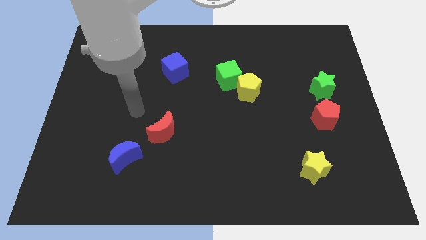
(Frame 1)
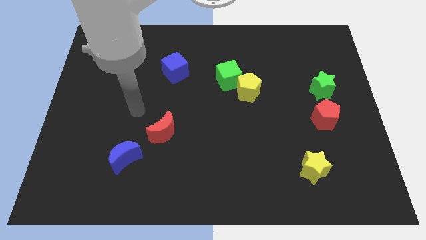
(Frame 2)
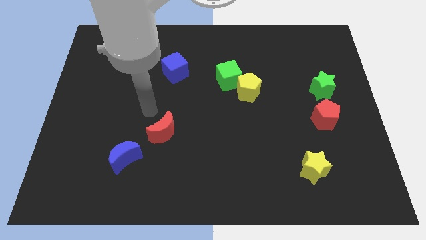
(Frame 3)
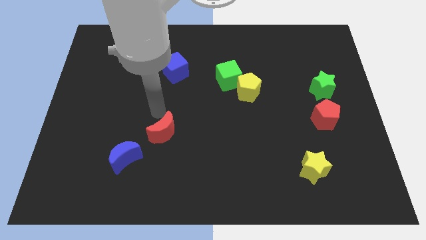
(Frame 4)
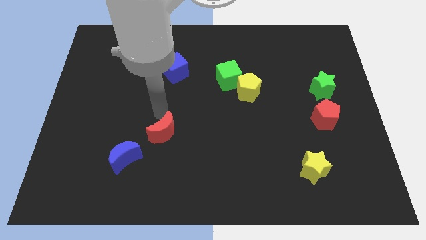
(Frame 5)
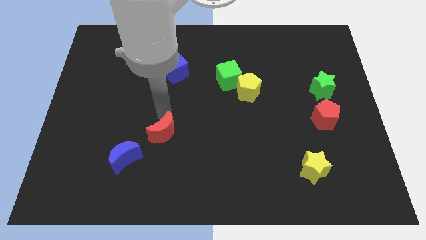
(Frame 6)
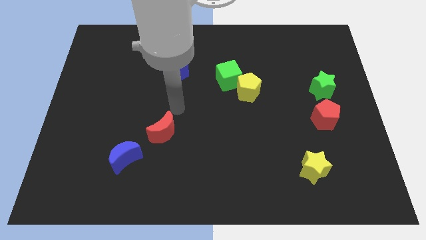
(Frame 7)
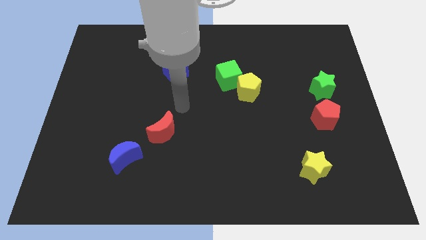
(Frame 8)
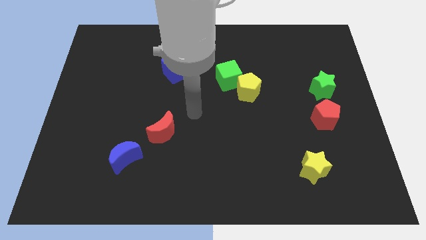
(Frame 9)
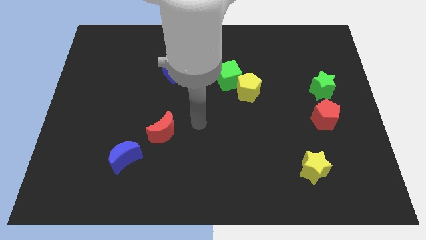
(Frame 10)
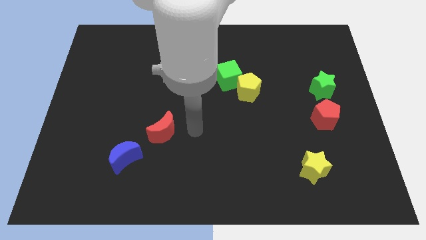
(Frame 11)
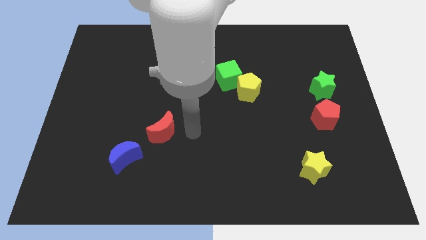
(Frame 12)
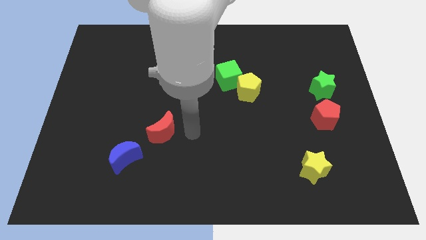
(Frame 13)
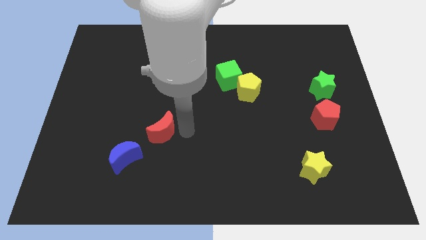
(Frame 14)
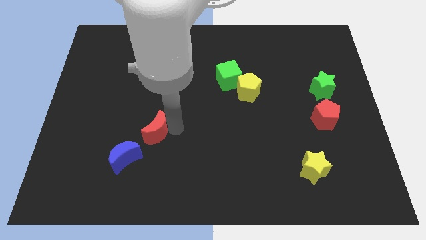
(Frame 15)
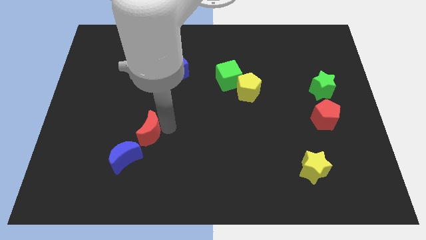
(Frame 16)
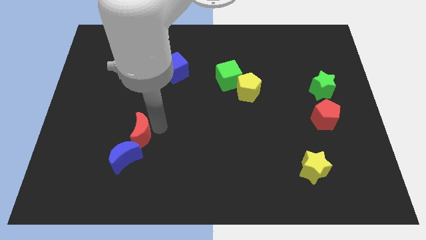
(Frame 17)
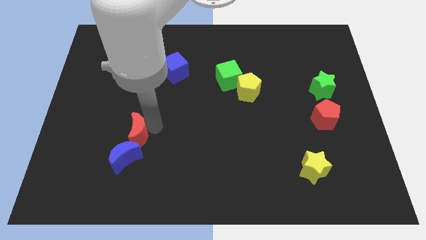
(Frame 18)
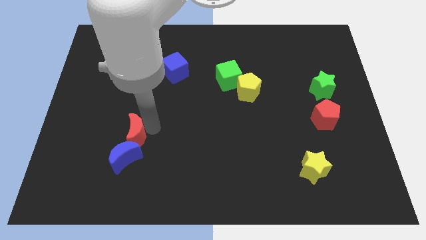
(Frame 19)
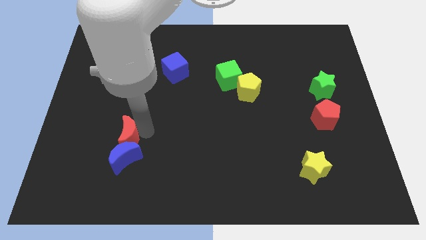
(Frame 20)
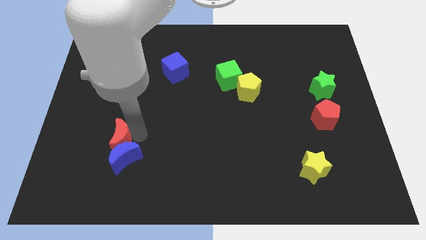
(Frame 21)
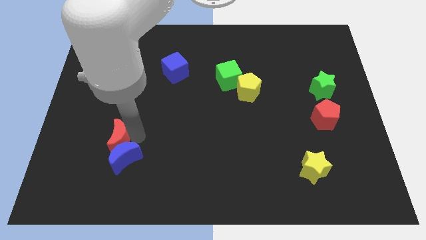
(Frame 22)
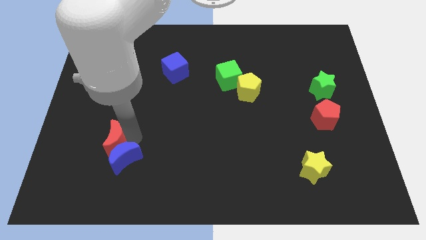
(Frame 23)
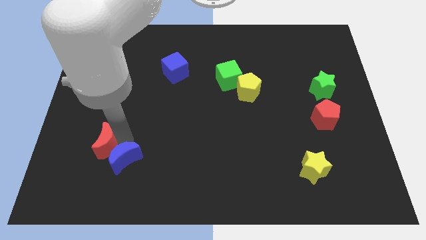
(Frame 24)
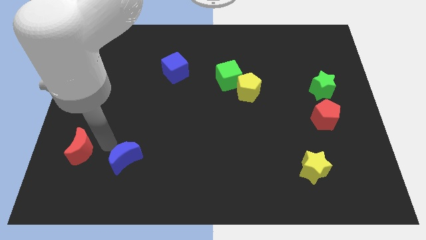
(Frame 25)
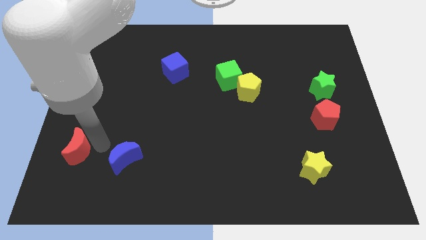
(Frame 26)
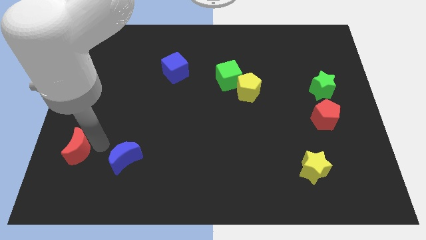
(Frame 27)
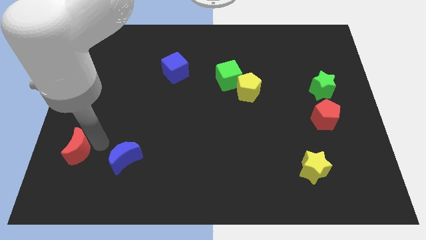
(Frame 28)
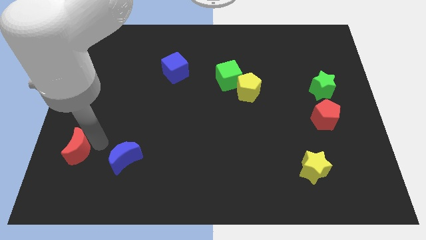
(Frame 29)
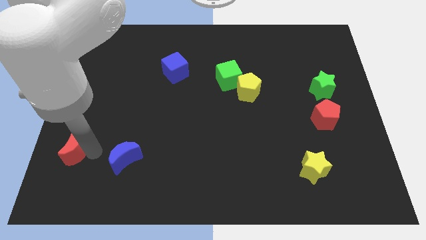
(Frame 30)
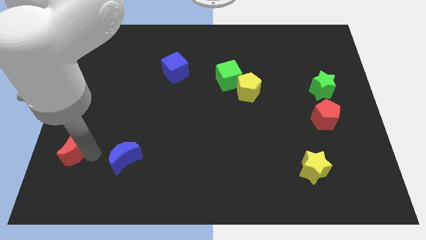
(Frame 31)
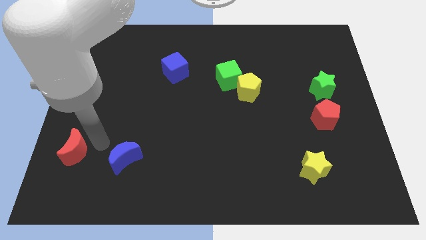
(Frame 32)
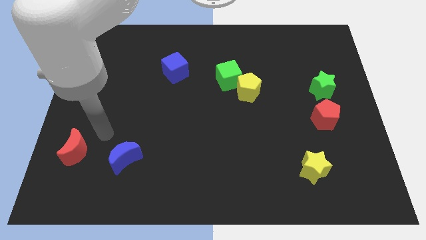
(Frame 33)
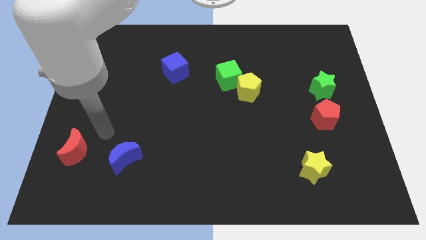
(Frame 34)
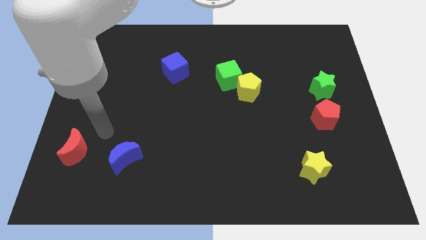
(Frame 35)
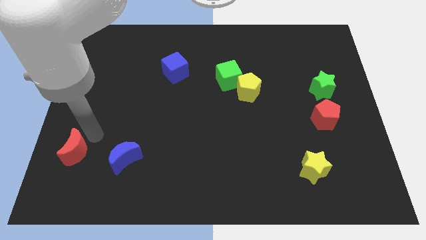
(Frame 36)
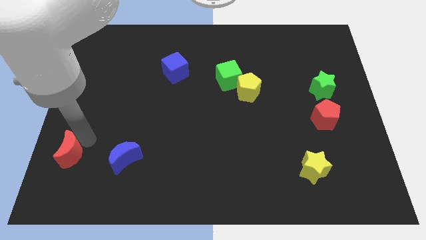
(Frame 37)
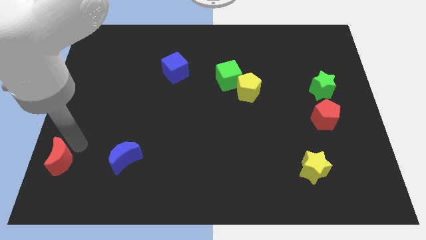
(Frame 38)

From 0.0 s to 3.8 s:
move the red crescent horizontally to the left side of the blue moon

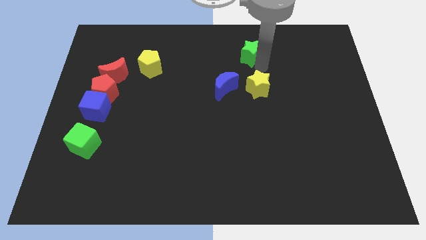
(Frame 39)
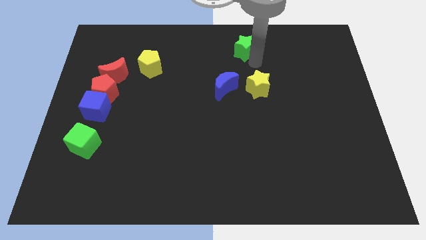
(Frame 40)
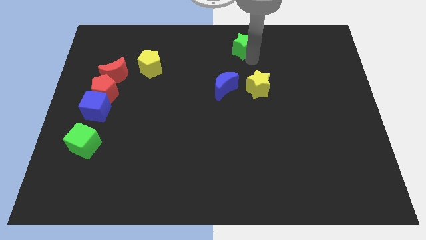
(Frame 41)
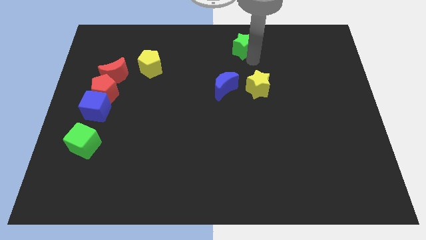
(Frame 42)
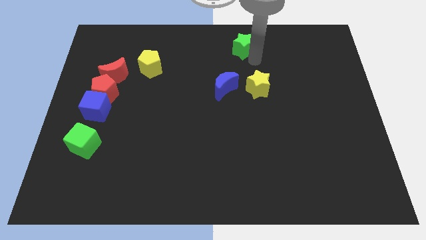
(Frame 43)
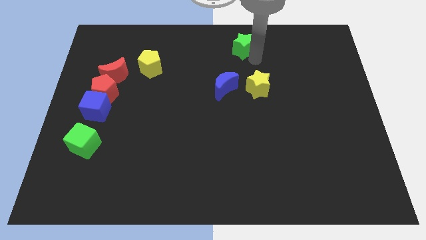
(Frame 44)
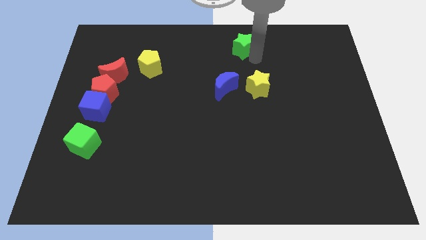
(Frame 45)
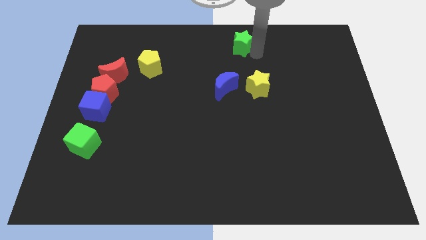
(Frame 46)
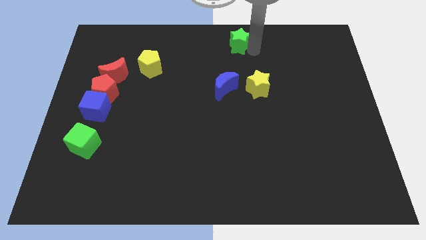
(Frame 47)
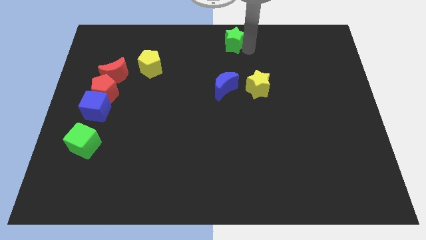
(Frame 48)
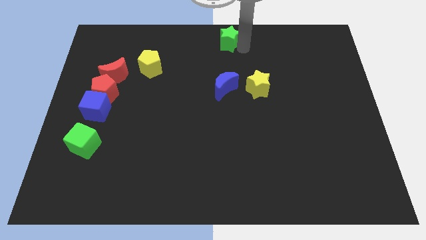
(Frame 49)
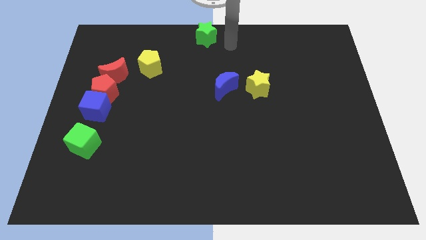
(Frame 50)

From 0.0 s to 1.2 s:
push the green star top center of the board

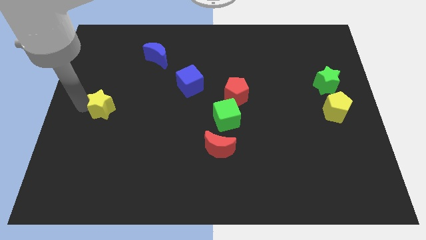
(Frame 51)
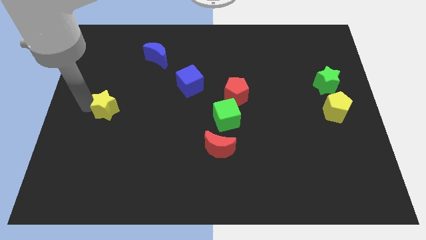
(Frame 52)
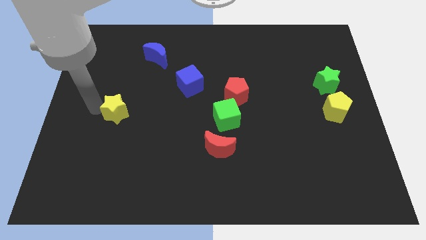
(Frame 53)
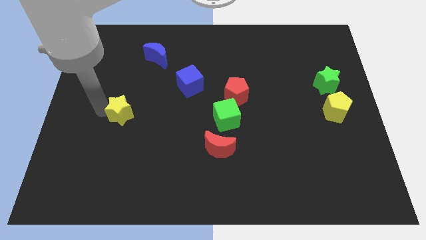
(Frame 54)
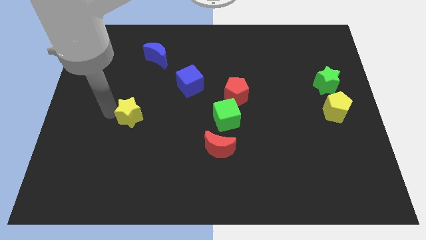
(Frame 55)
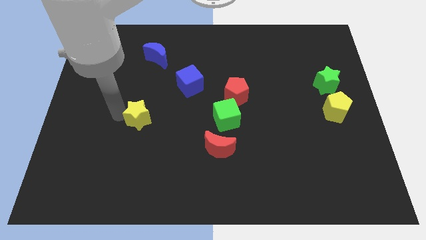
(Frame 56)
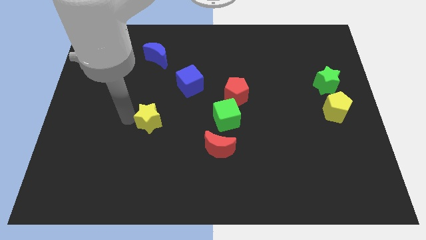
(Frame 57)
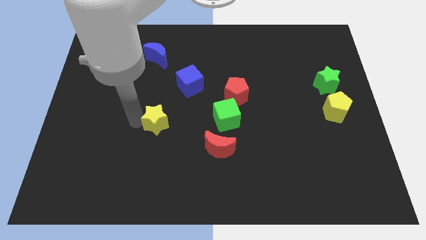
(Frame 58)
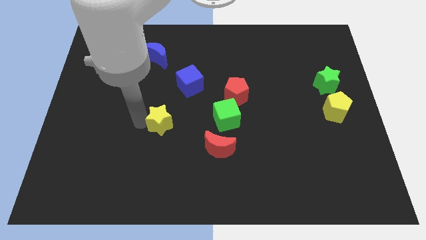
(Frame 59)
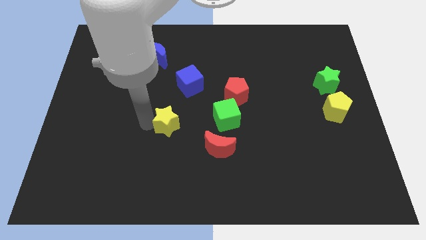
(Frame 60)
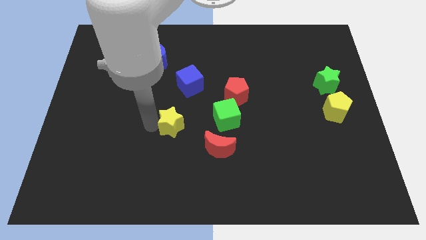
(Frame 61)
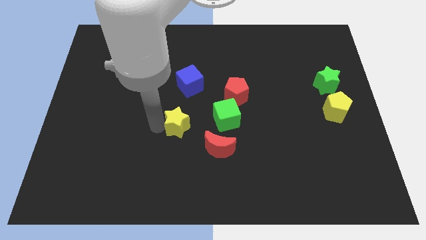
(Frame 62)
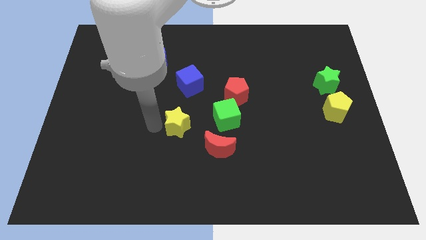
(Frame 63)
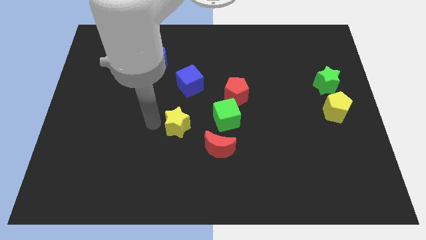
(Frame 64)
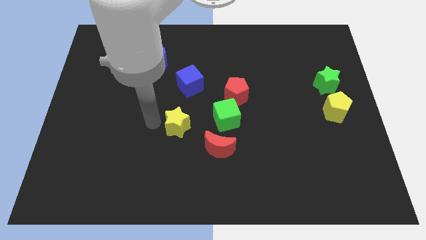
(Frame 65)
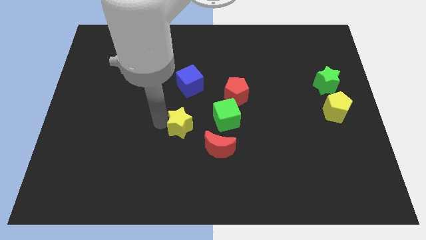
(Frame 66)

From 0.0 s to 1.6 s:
slide the yellow star towards the red moon

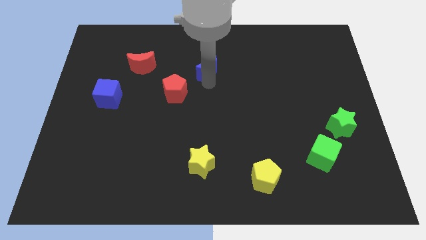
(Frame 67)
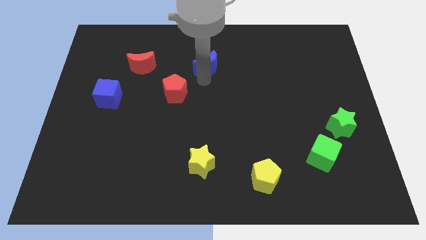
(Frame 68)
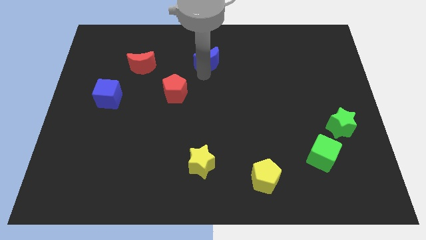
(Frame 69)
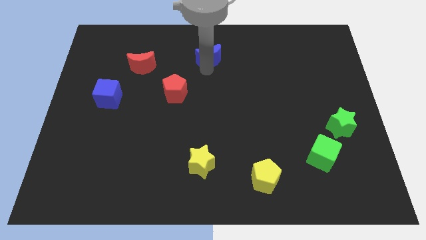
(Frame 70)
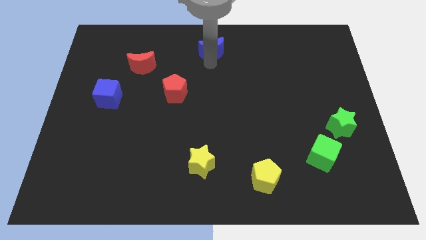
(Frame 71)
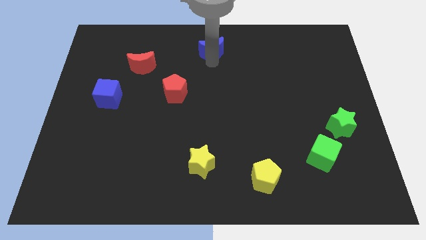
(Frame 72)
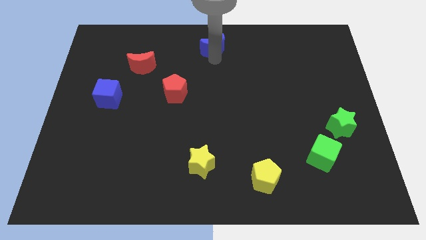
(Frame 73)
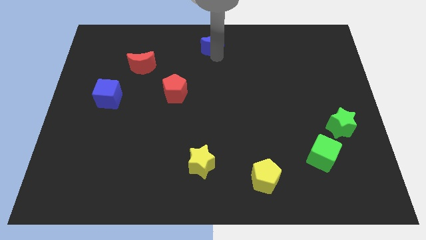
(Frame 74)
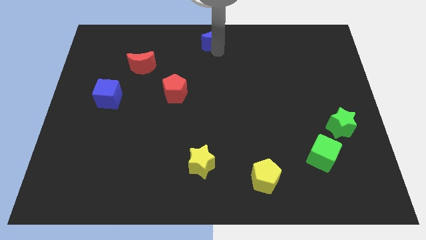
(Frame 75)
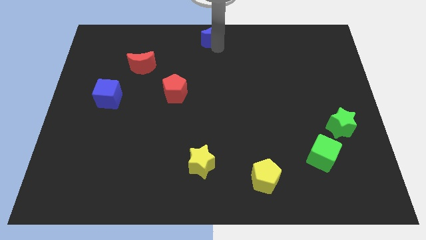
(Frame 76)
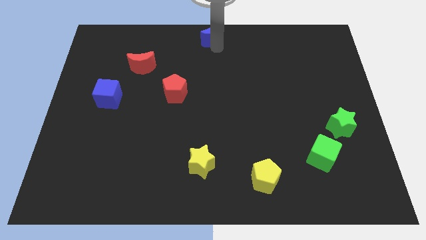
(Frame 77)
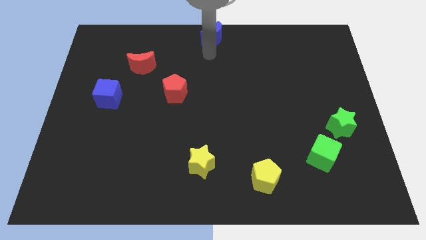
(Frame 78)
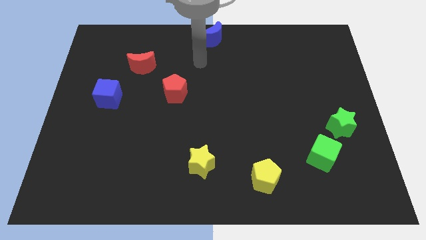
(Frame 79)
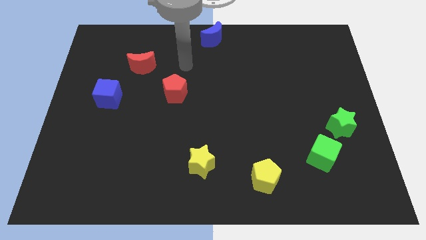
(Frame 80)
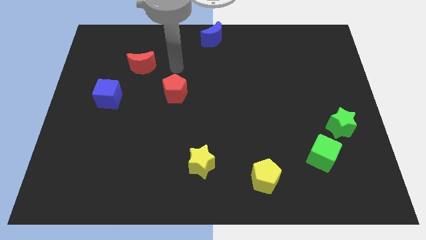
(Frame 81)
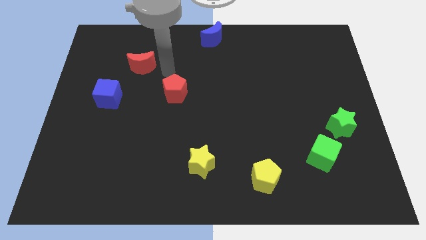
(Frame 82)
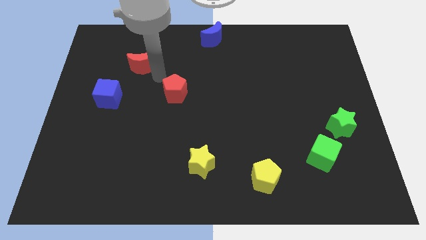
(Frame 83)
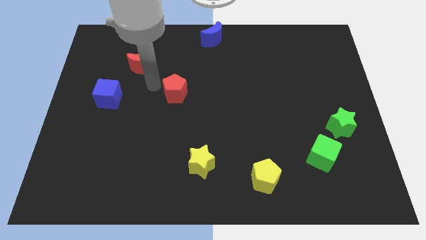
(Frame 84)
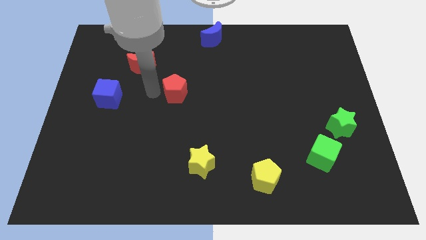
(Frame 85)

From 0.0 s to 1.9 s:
place the blue moon at the top center of the board

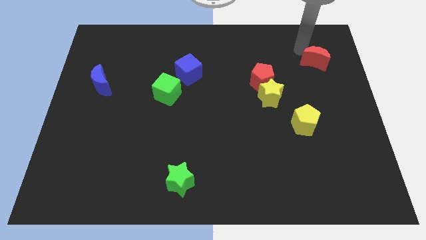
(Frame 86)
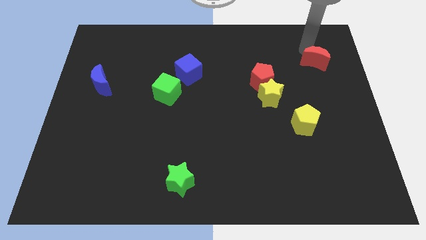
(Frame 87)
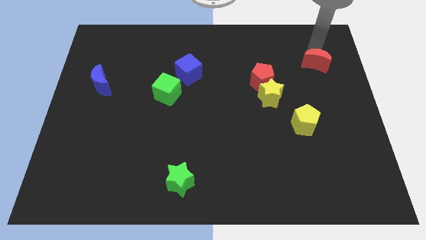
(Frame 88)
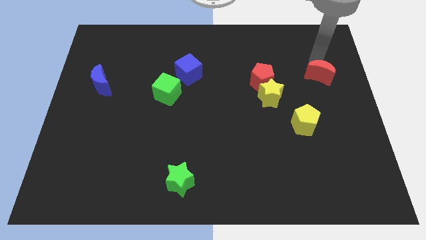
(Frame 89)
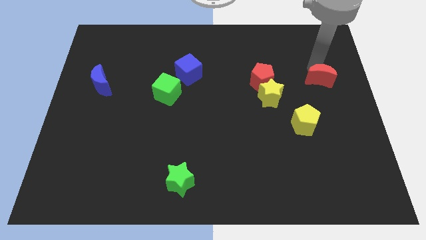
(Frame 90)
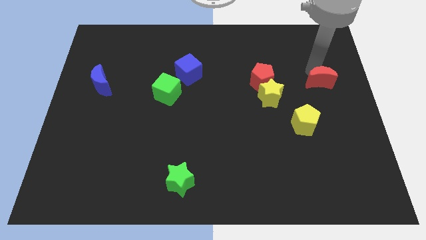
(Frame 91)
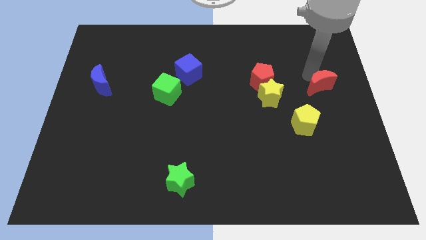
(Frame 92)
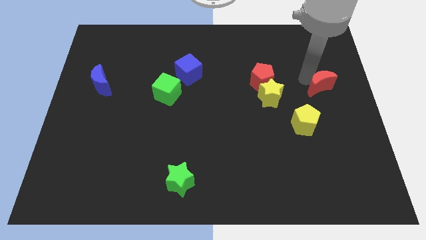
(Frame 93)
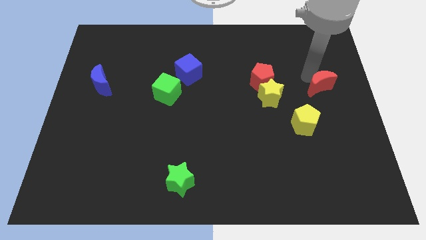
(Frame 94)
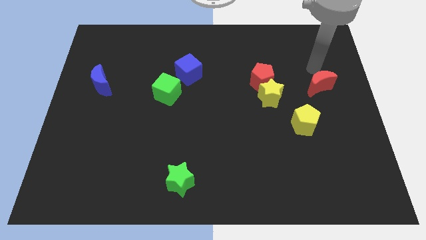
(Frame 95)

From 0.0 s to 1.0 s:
move the red moon slightly towards the bottom
